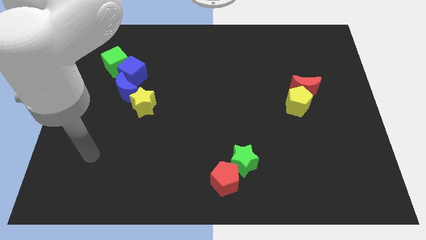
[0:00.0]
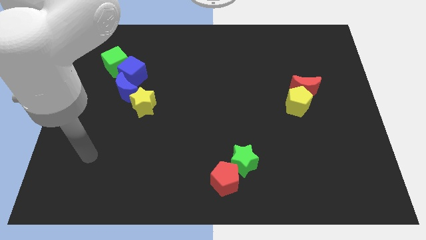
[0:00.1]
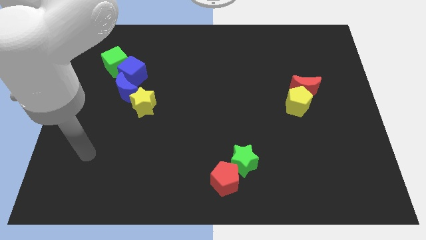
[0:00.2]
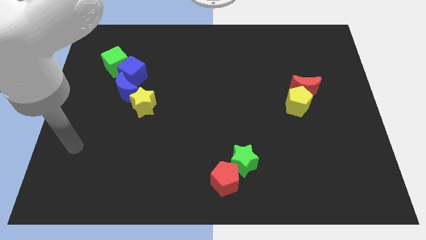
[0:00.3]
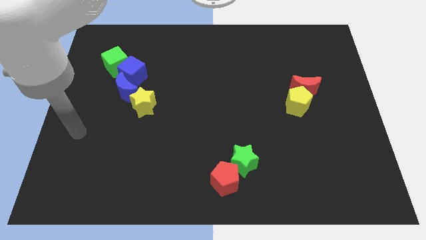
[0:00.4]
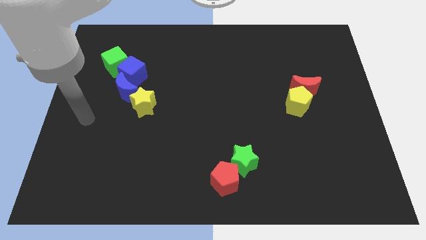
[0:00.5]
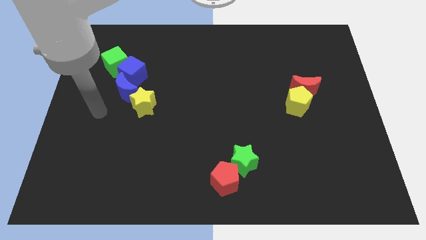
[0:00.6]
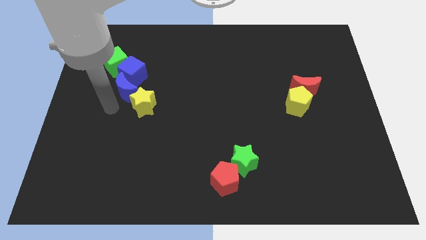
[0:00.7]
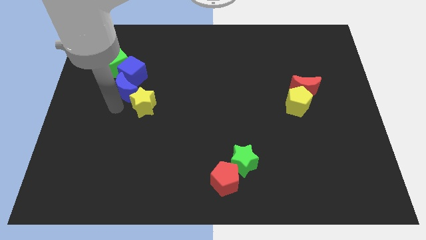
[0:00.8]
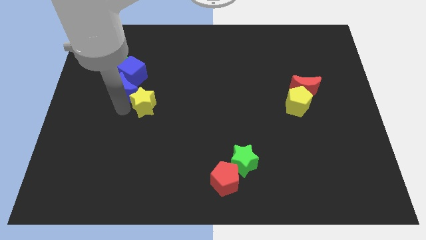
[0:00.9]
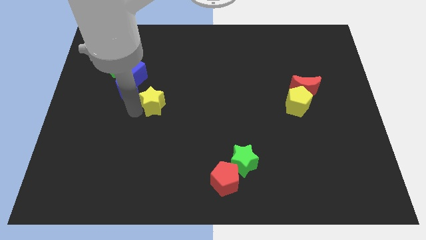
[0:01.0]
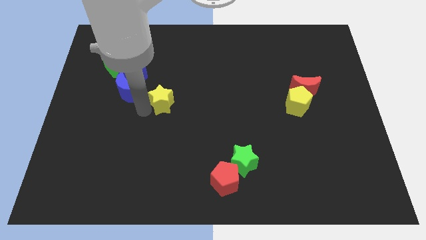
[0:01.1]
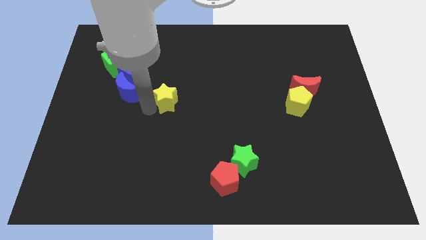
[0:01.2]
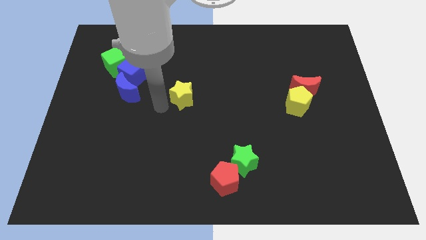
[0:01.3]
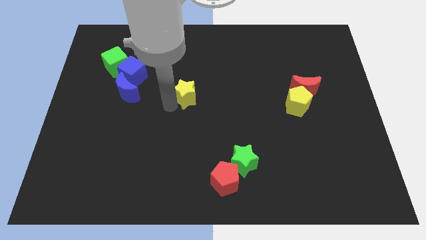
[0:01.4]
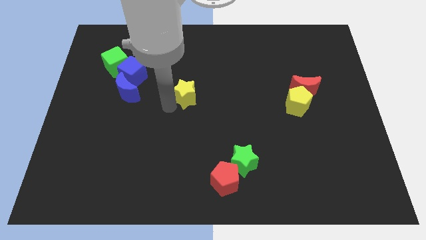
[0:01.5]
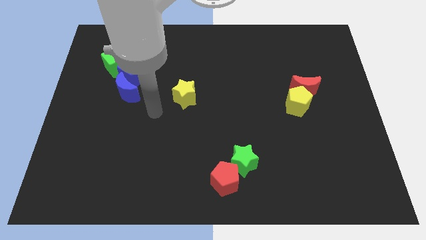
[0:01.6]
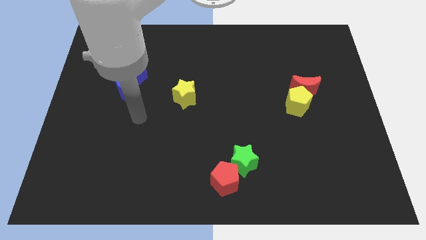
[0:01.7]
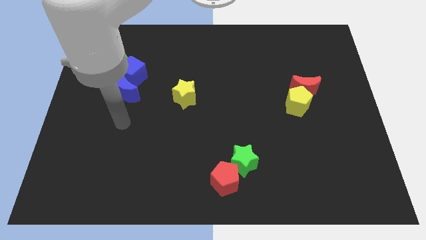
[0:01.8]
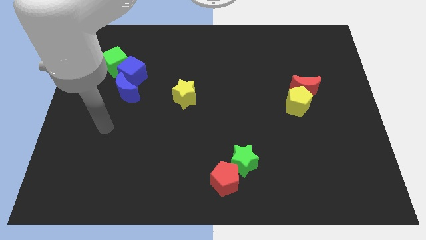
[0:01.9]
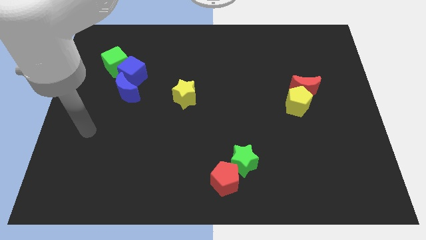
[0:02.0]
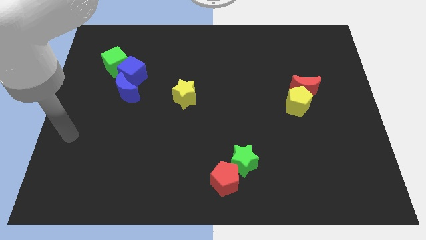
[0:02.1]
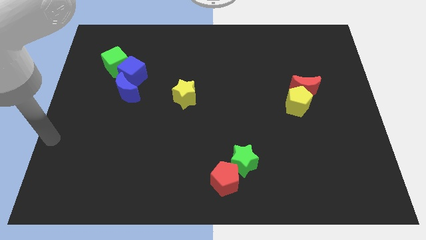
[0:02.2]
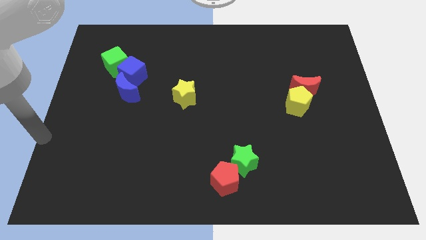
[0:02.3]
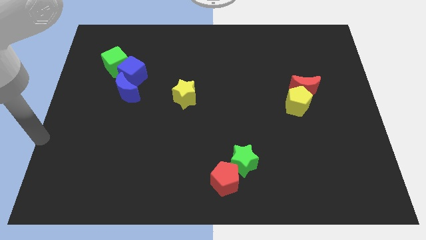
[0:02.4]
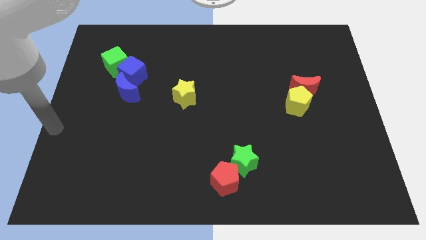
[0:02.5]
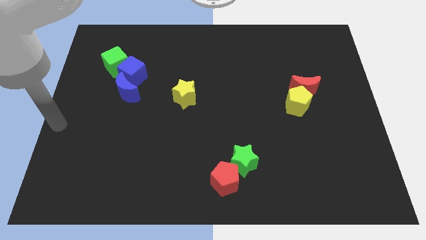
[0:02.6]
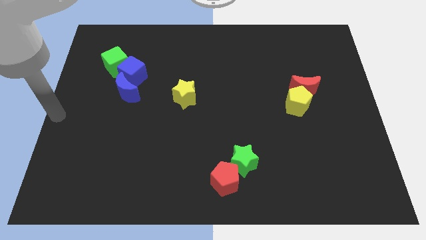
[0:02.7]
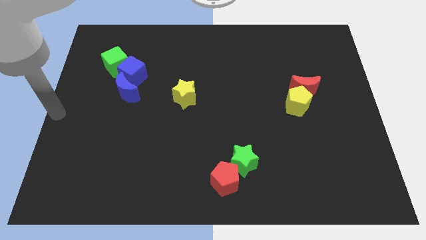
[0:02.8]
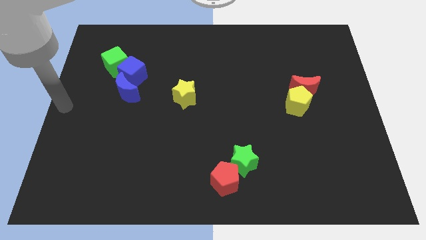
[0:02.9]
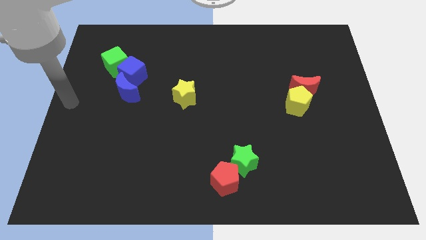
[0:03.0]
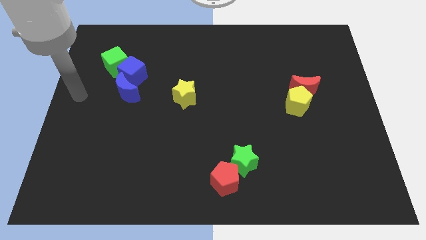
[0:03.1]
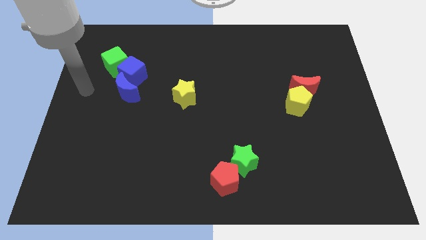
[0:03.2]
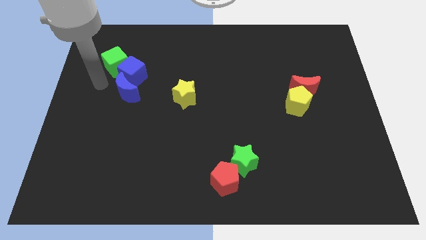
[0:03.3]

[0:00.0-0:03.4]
move the yellow star to the bottom right side of the blue cube

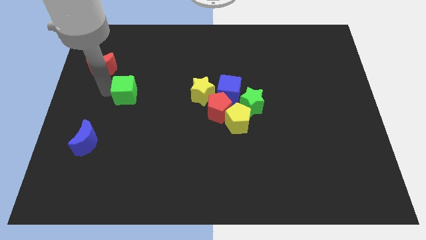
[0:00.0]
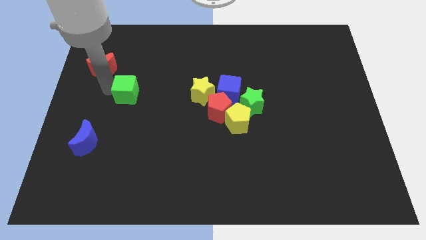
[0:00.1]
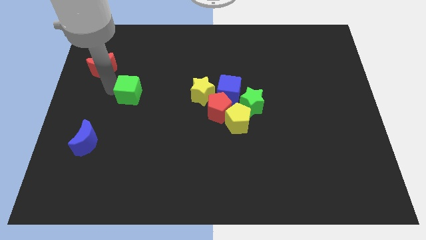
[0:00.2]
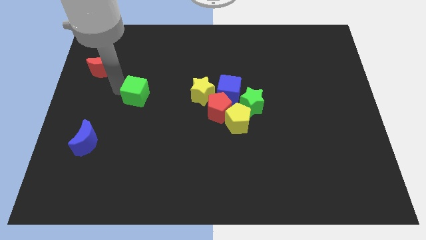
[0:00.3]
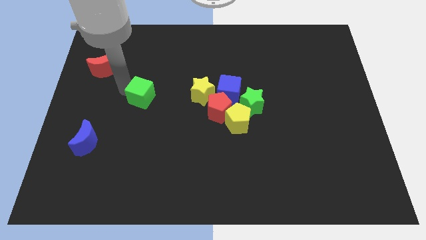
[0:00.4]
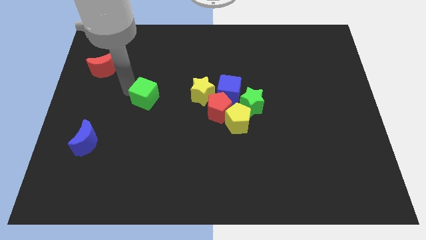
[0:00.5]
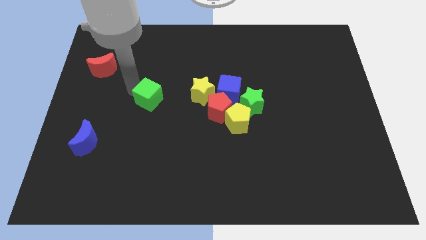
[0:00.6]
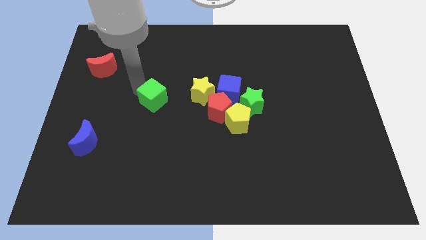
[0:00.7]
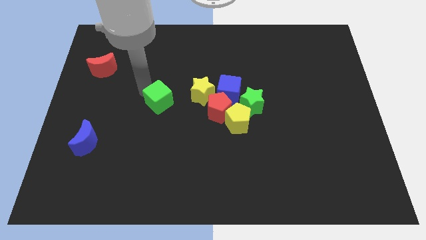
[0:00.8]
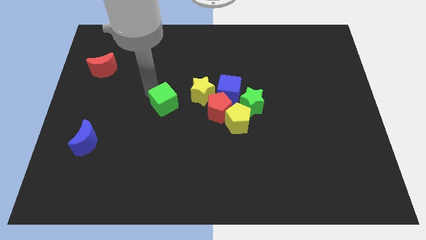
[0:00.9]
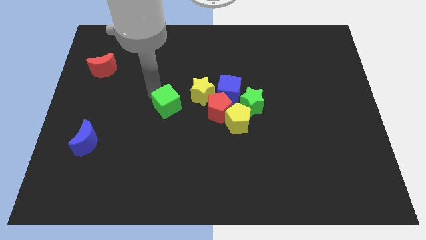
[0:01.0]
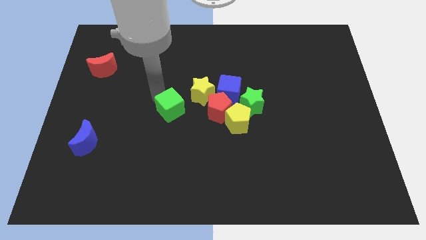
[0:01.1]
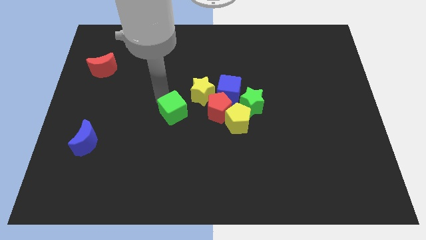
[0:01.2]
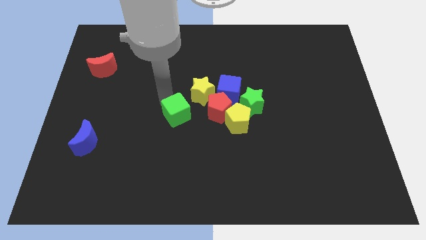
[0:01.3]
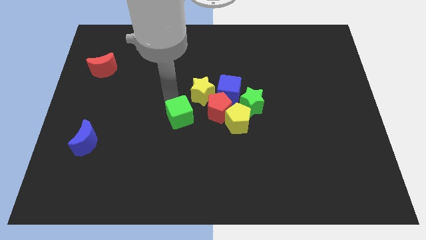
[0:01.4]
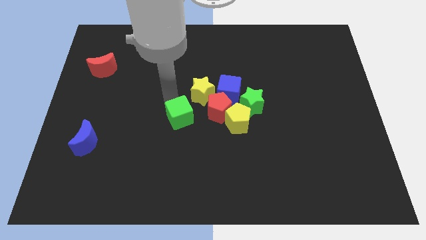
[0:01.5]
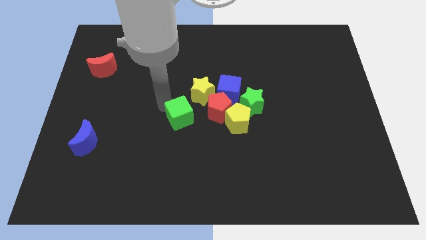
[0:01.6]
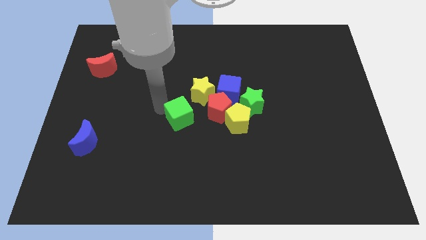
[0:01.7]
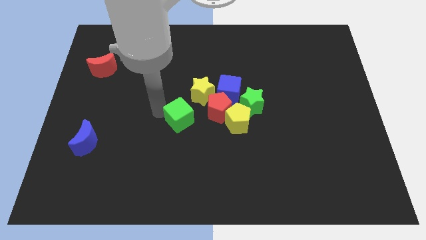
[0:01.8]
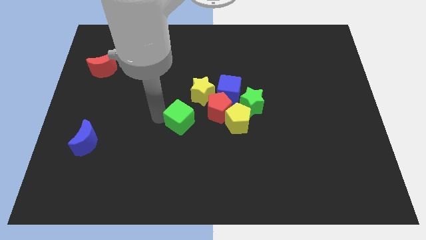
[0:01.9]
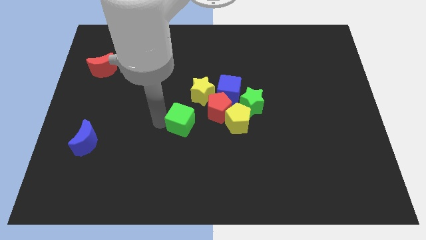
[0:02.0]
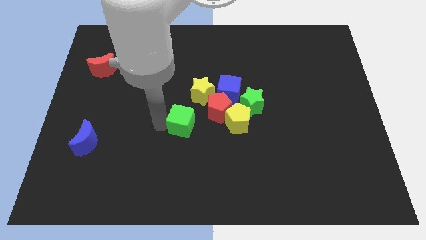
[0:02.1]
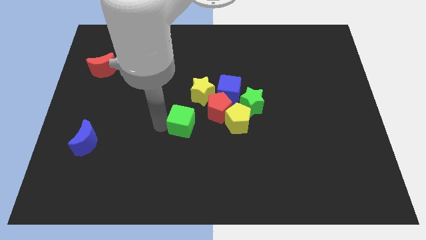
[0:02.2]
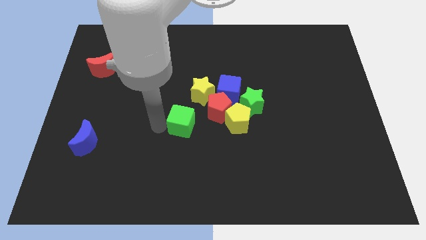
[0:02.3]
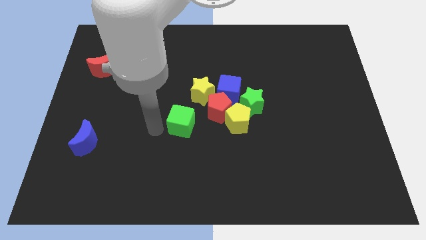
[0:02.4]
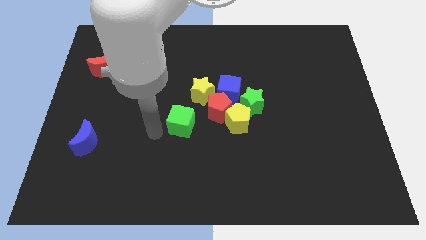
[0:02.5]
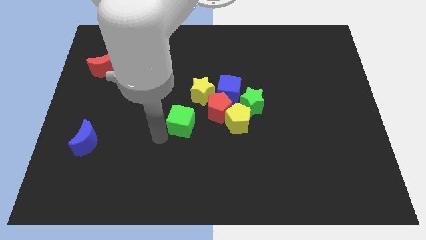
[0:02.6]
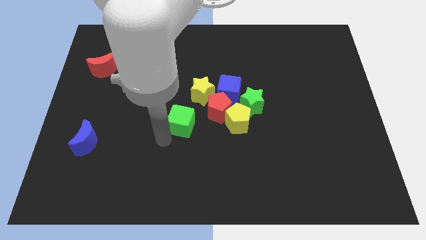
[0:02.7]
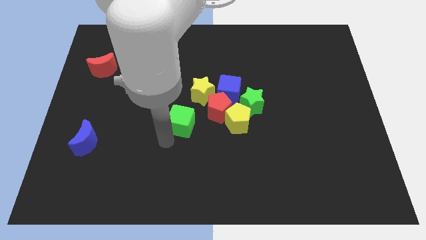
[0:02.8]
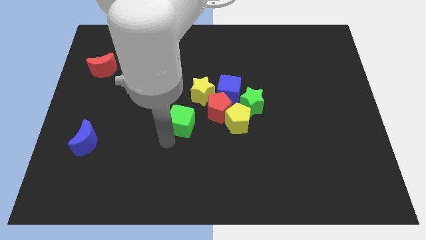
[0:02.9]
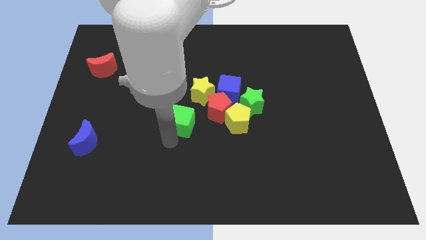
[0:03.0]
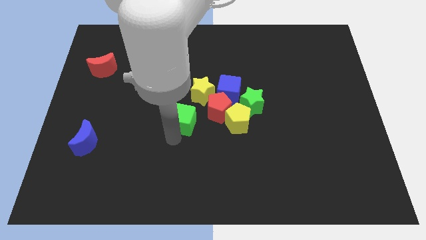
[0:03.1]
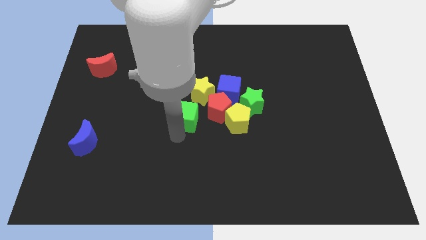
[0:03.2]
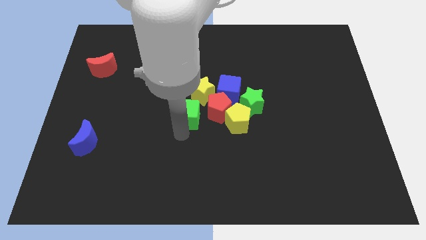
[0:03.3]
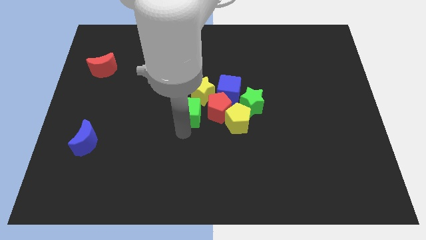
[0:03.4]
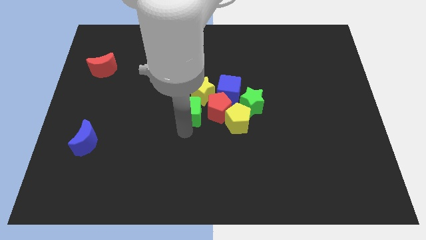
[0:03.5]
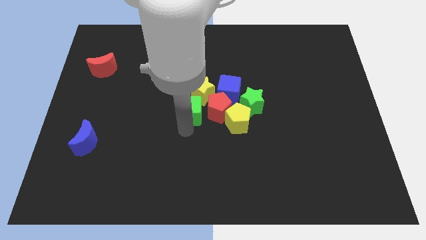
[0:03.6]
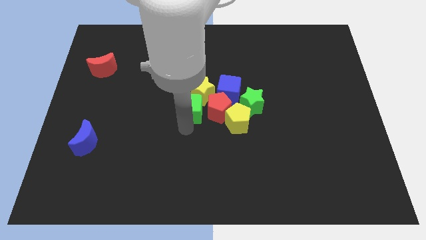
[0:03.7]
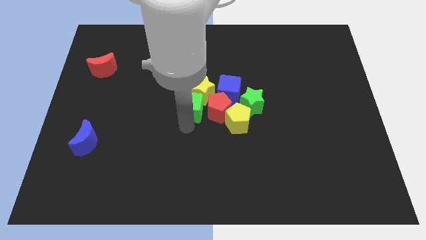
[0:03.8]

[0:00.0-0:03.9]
push green cube into yellow star

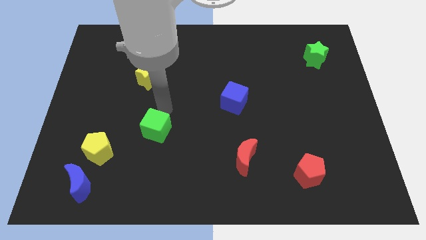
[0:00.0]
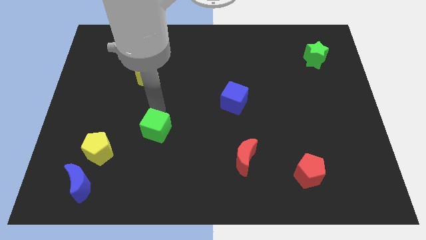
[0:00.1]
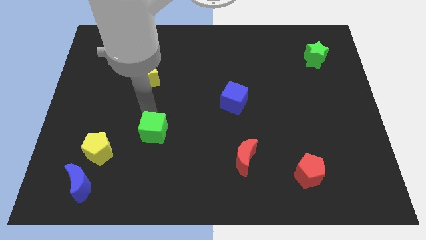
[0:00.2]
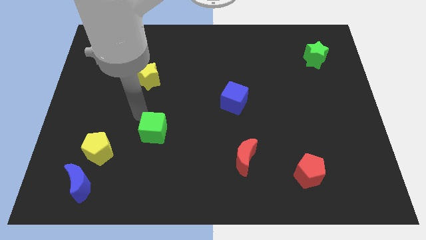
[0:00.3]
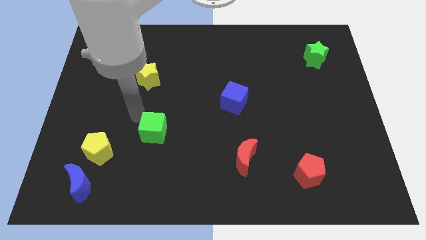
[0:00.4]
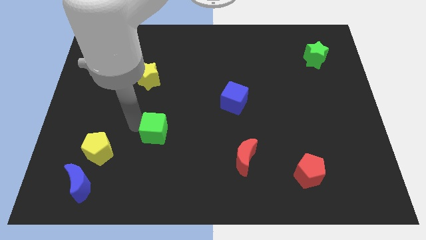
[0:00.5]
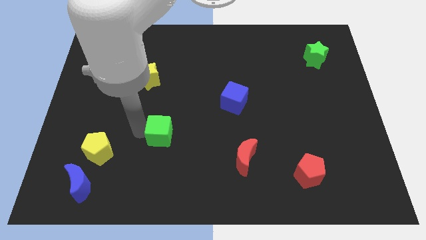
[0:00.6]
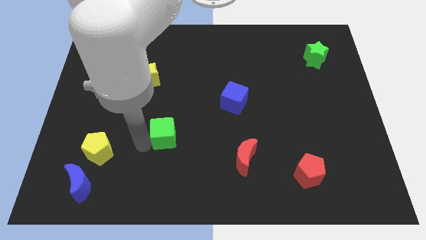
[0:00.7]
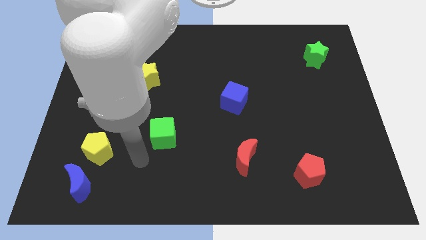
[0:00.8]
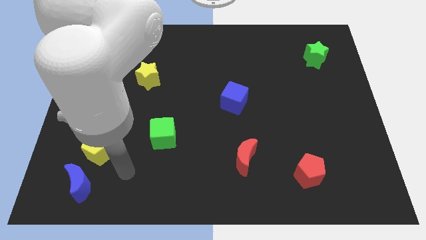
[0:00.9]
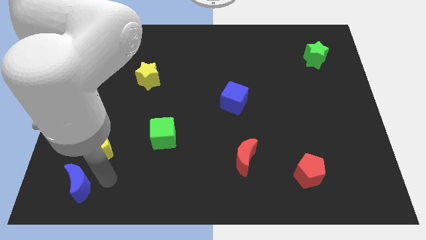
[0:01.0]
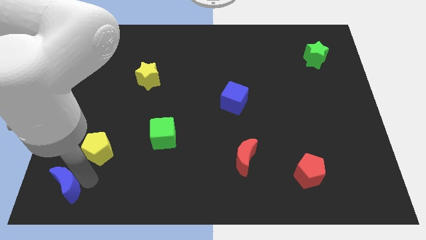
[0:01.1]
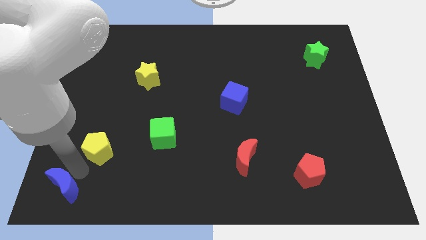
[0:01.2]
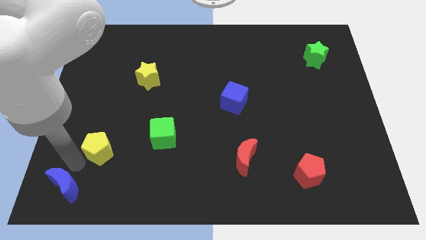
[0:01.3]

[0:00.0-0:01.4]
touch arm at the top of blue moon

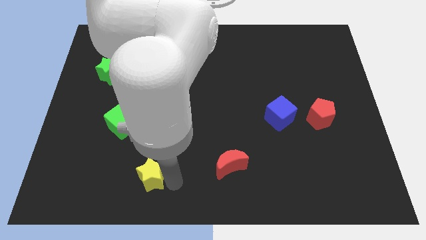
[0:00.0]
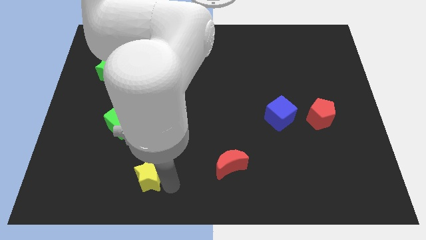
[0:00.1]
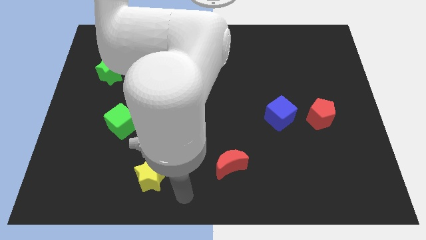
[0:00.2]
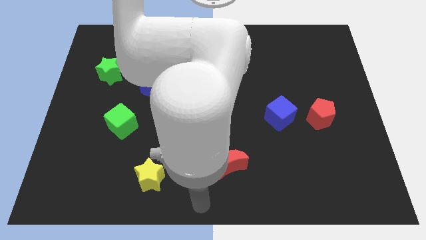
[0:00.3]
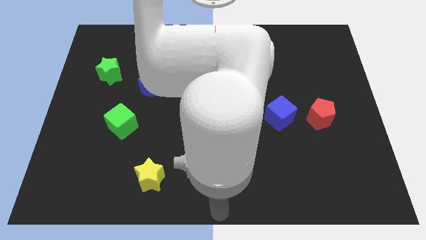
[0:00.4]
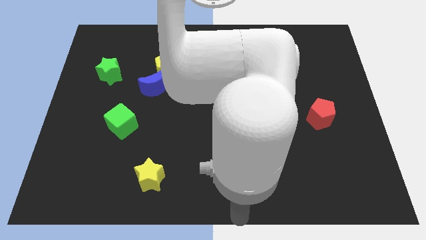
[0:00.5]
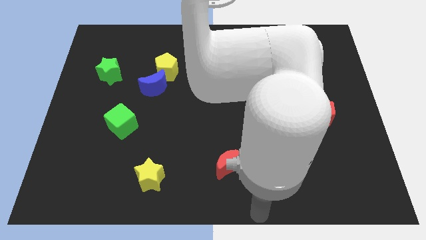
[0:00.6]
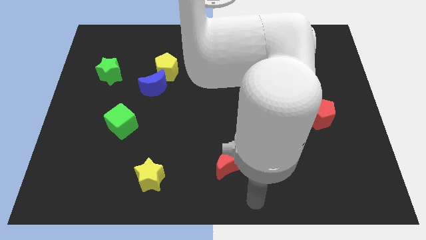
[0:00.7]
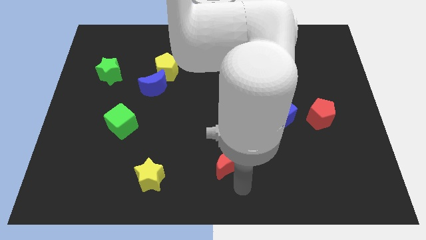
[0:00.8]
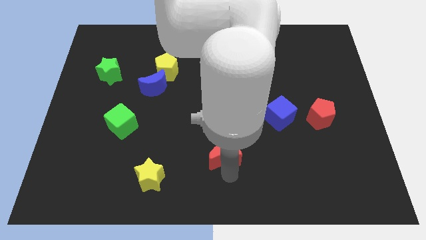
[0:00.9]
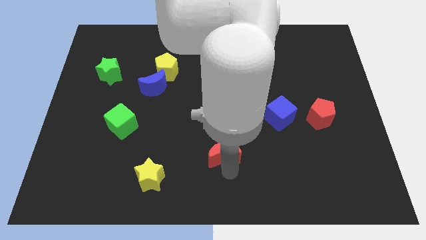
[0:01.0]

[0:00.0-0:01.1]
move red moon slightly up
